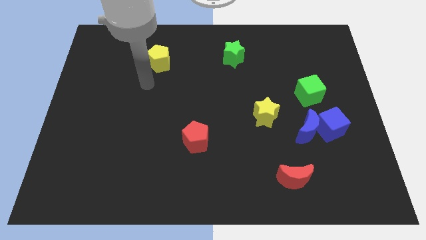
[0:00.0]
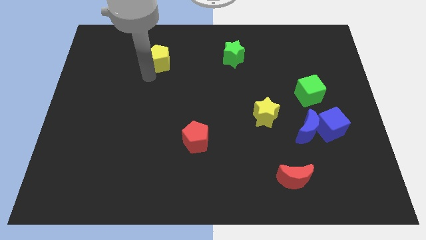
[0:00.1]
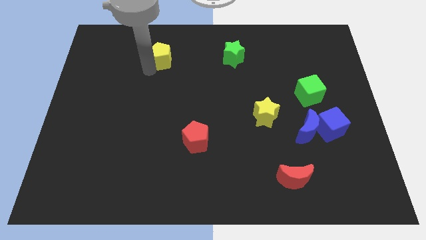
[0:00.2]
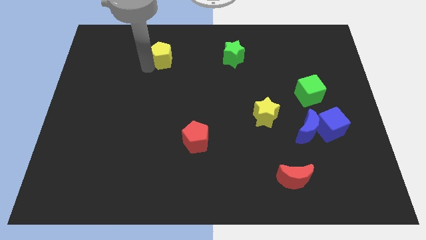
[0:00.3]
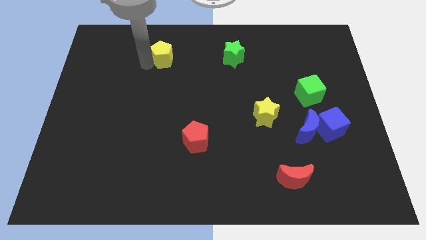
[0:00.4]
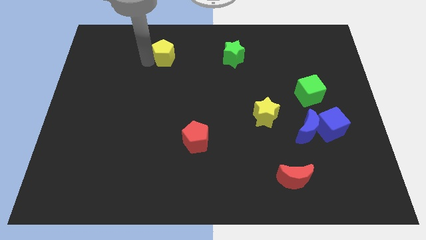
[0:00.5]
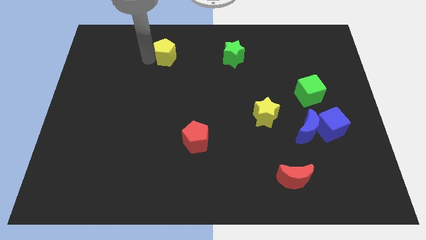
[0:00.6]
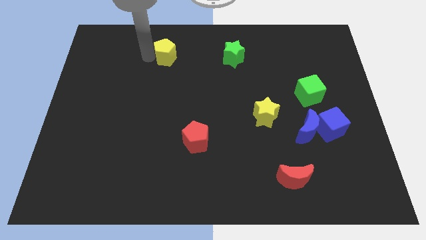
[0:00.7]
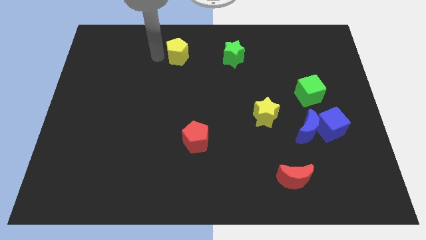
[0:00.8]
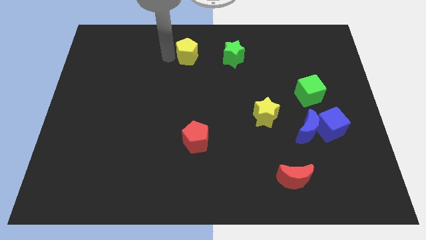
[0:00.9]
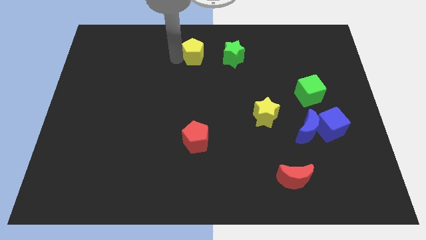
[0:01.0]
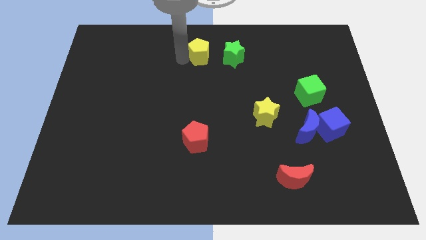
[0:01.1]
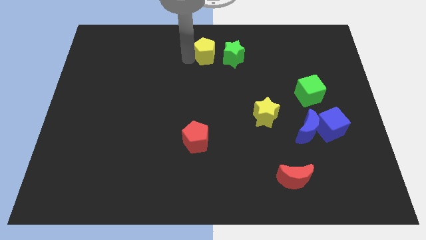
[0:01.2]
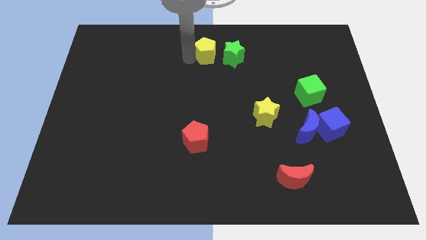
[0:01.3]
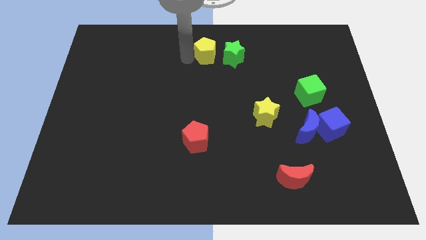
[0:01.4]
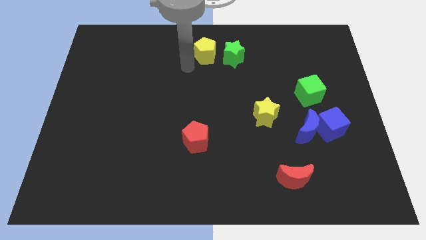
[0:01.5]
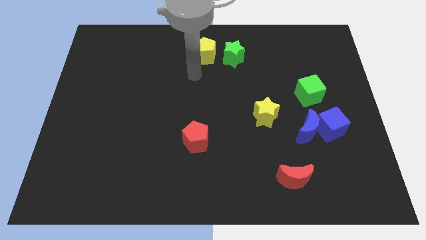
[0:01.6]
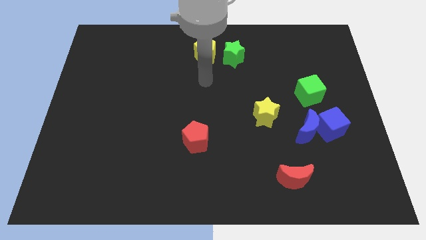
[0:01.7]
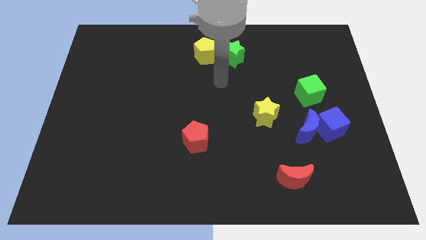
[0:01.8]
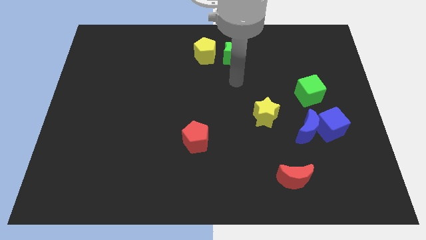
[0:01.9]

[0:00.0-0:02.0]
place the yellow pentagon to the left of green star

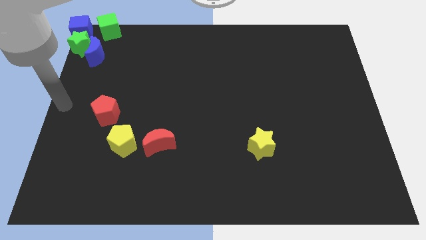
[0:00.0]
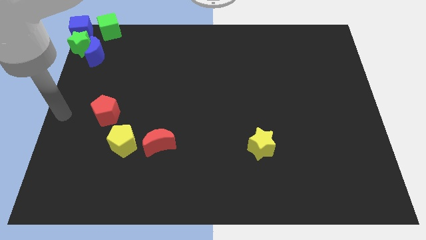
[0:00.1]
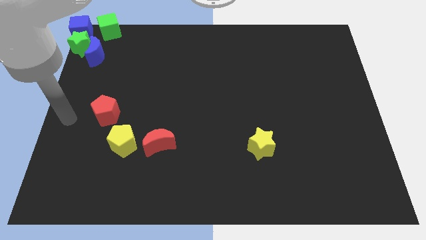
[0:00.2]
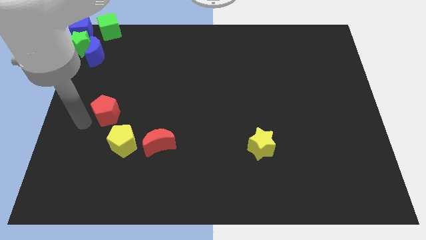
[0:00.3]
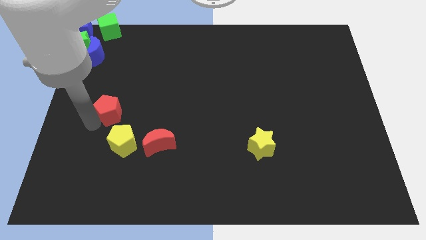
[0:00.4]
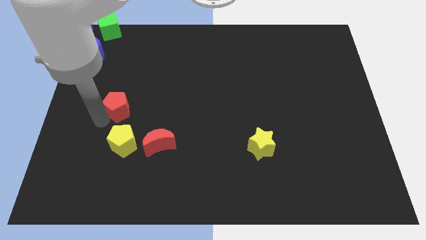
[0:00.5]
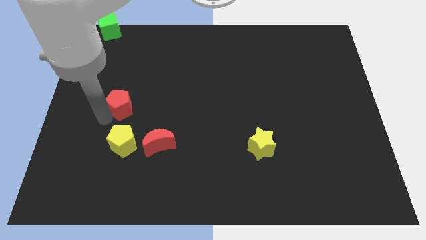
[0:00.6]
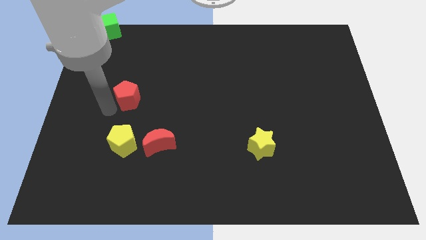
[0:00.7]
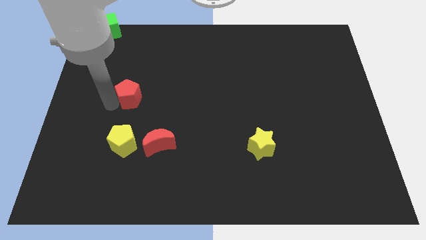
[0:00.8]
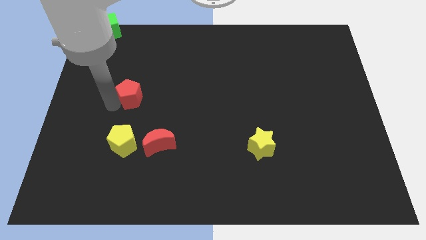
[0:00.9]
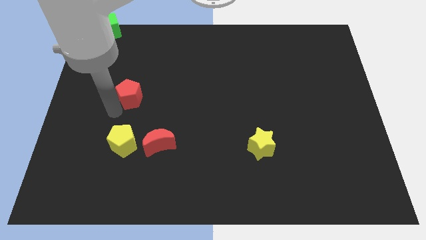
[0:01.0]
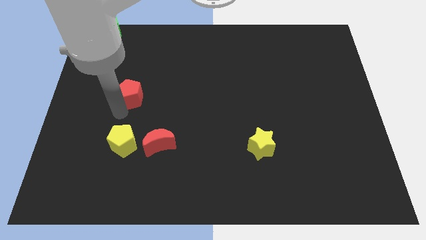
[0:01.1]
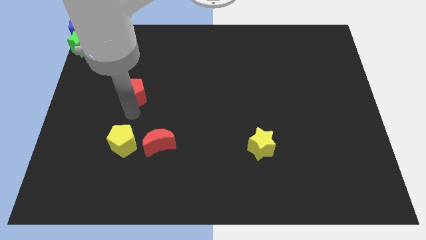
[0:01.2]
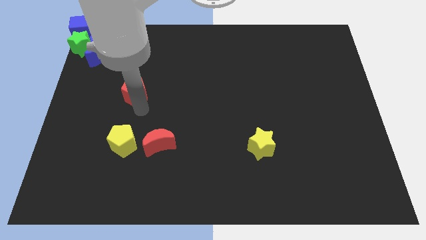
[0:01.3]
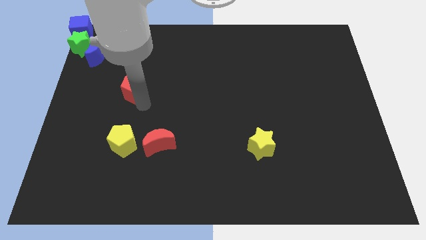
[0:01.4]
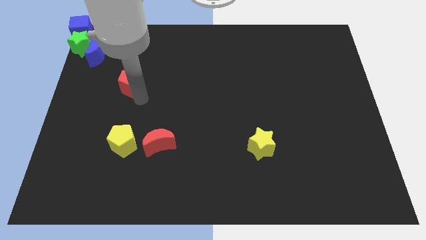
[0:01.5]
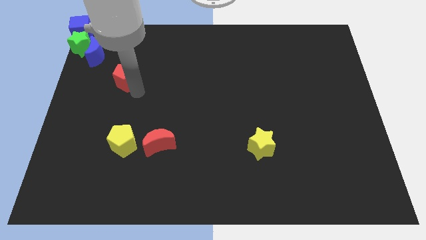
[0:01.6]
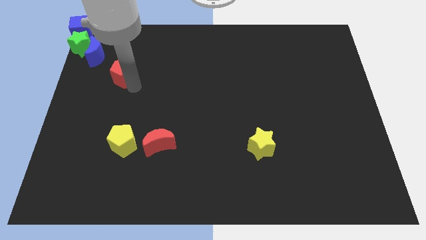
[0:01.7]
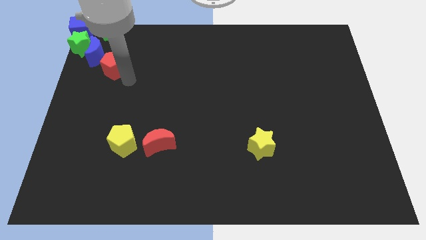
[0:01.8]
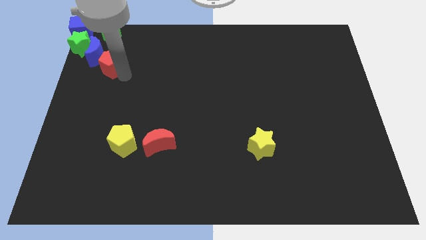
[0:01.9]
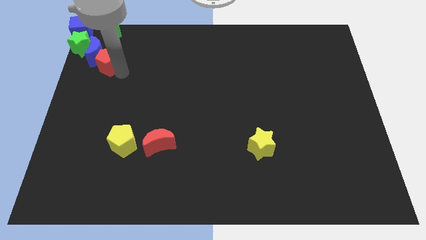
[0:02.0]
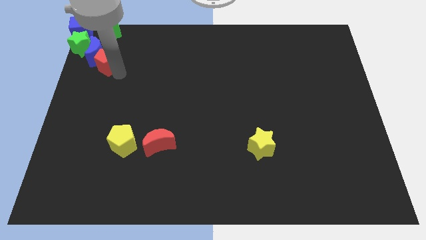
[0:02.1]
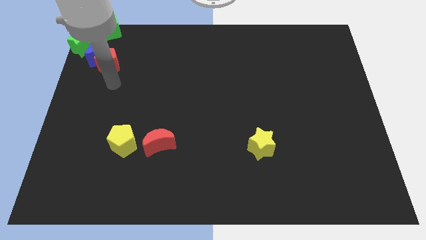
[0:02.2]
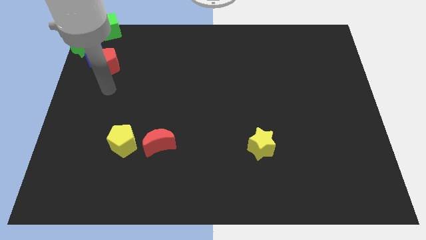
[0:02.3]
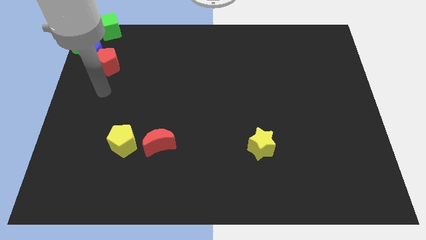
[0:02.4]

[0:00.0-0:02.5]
slide the red pentagon into the blue moon

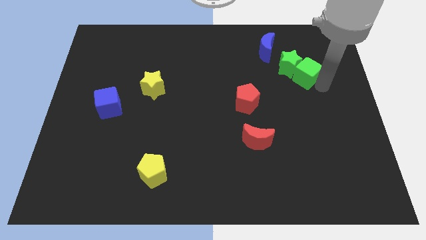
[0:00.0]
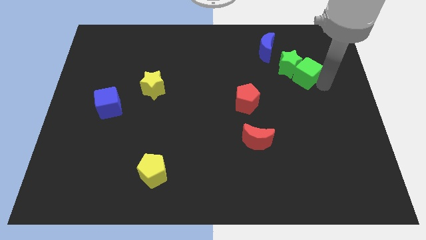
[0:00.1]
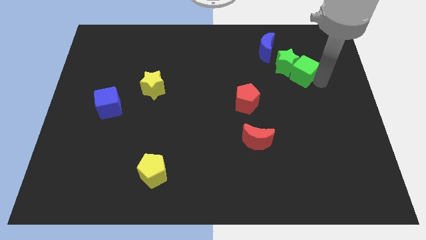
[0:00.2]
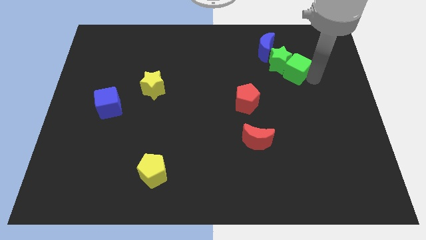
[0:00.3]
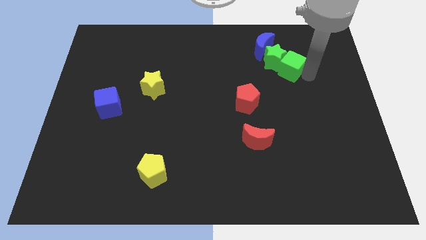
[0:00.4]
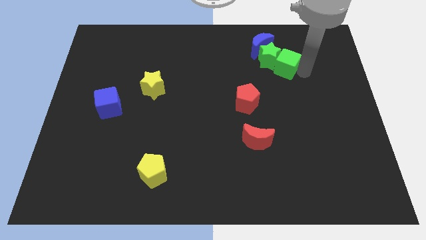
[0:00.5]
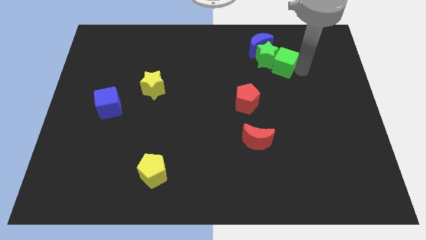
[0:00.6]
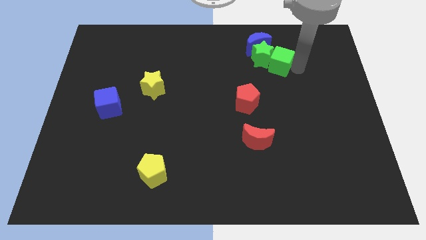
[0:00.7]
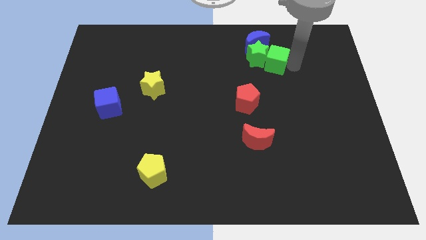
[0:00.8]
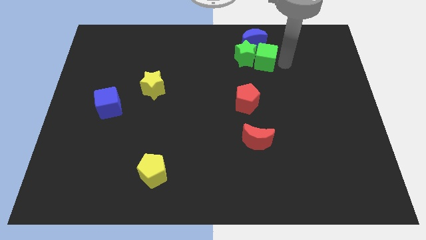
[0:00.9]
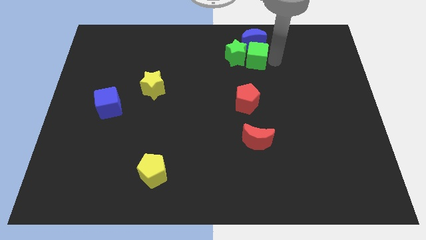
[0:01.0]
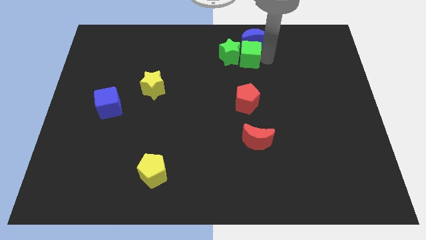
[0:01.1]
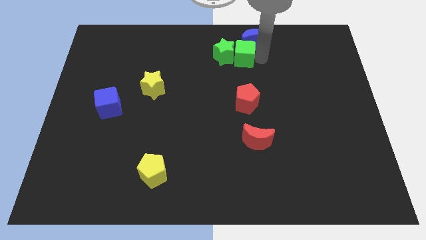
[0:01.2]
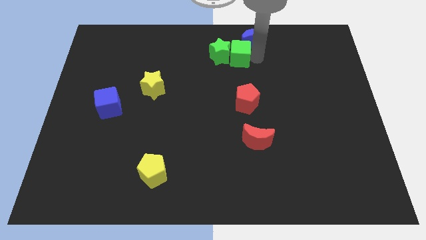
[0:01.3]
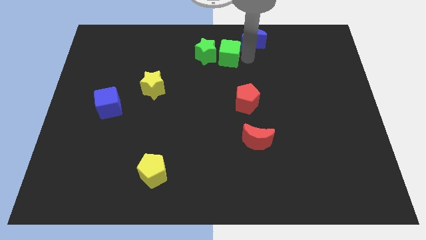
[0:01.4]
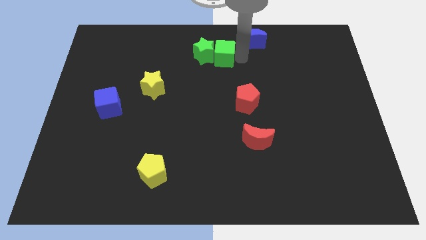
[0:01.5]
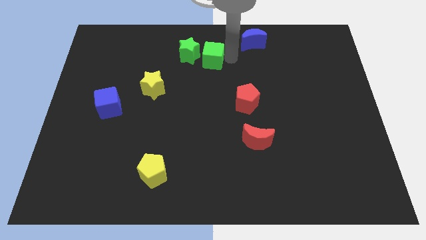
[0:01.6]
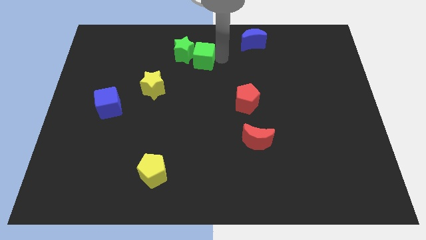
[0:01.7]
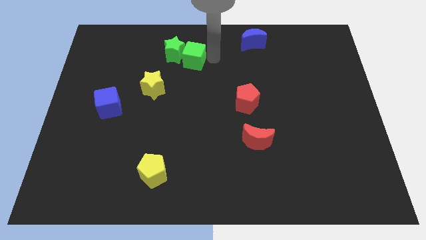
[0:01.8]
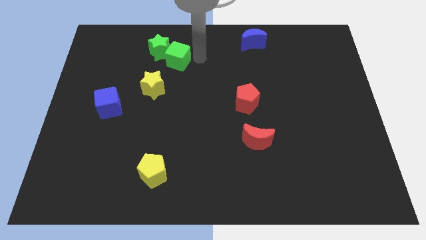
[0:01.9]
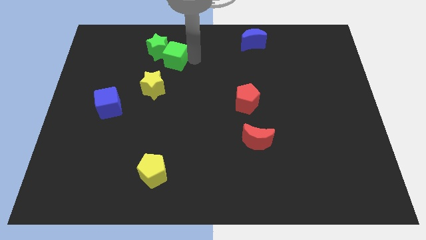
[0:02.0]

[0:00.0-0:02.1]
slide the green blocks towards the top left

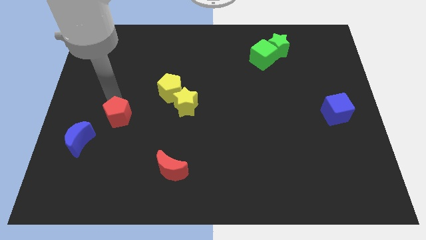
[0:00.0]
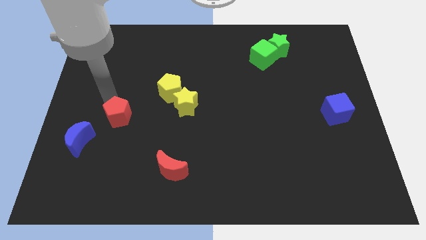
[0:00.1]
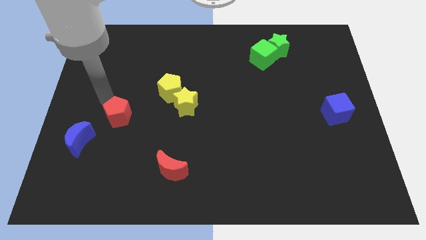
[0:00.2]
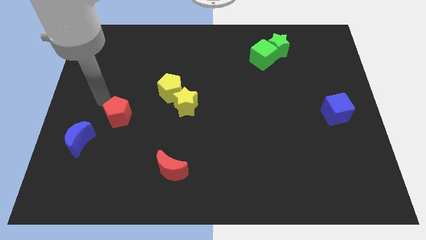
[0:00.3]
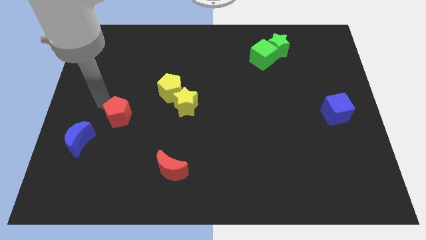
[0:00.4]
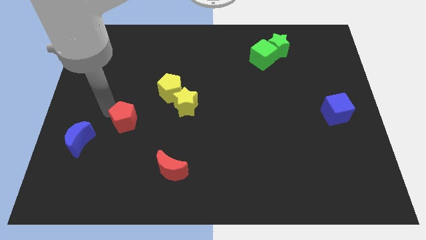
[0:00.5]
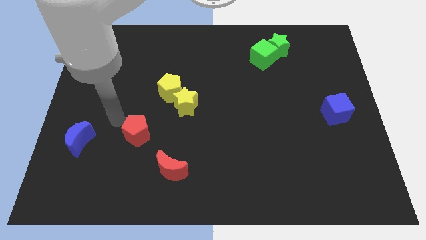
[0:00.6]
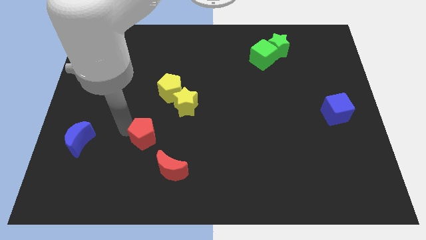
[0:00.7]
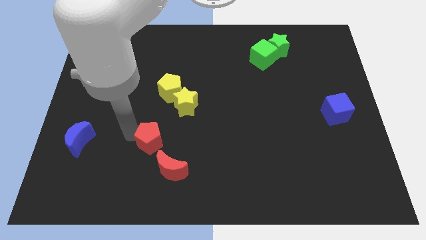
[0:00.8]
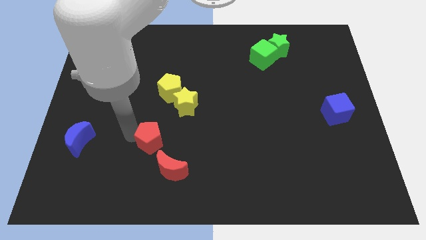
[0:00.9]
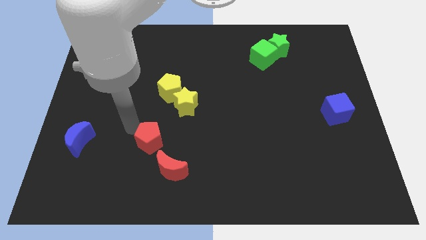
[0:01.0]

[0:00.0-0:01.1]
move the red pentagon to the top of the red crescent

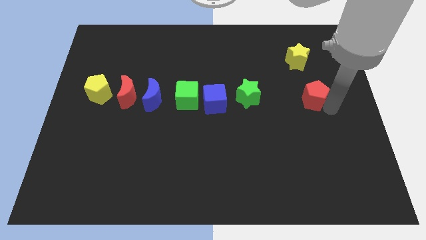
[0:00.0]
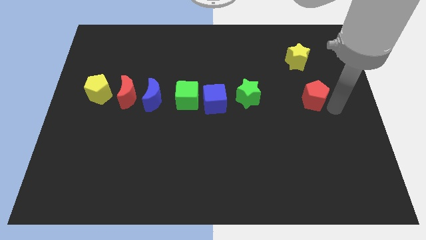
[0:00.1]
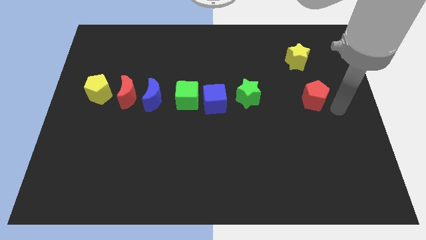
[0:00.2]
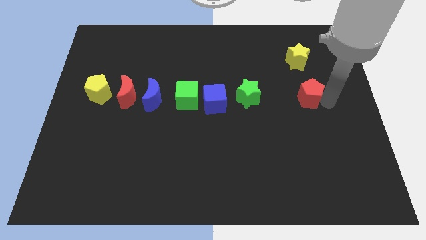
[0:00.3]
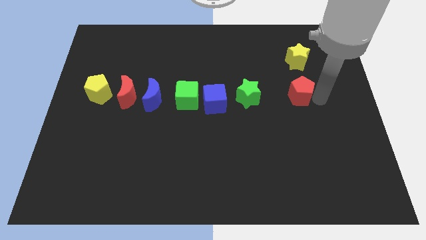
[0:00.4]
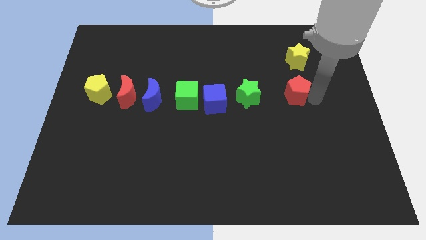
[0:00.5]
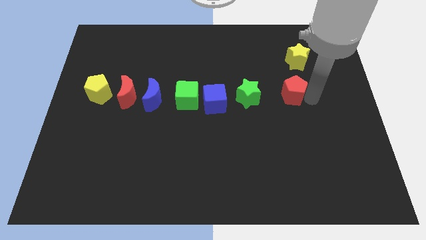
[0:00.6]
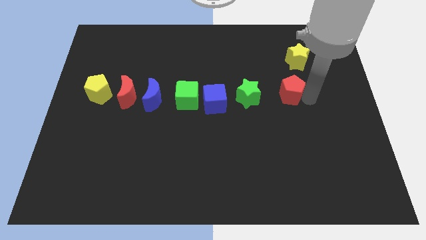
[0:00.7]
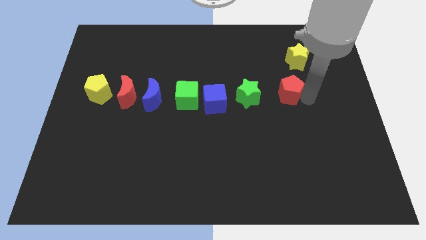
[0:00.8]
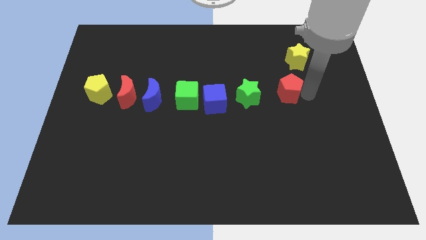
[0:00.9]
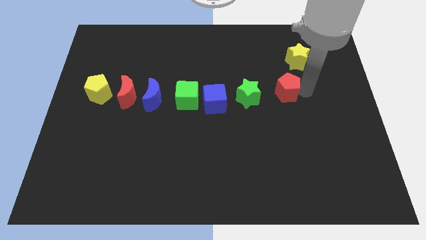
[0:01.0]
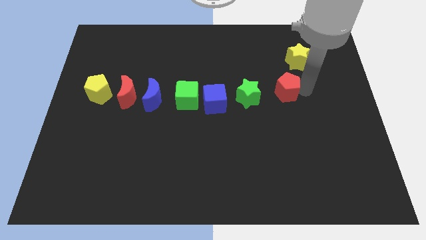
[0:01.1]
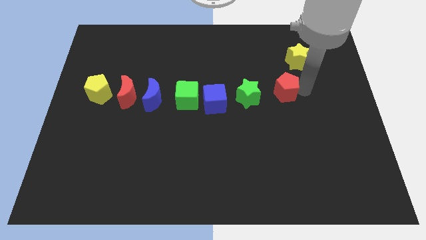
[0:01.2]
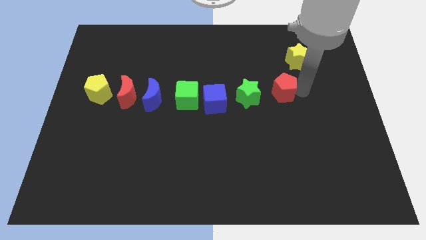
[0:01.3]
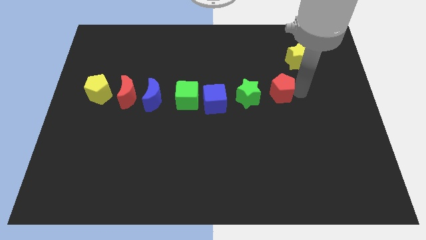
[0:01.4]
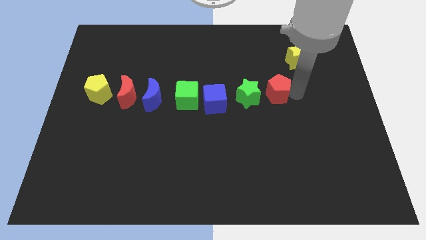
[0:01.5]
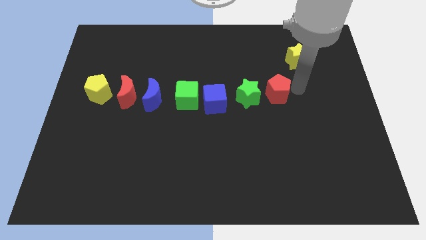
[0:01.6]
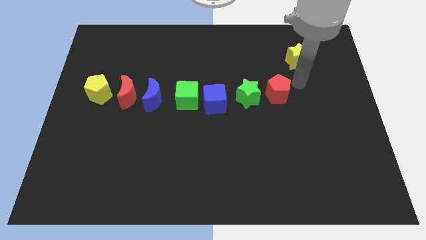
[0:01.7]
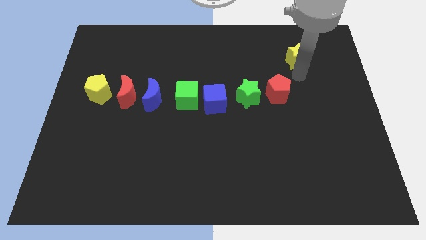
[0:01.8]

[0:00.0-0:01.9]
place red pentagon to the right of green star
